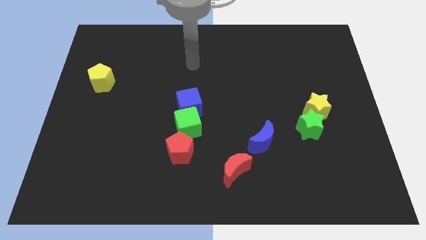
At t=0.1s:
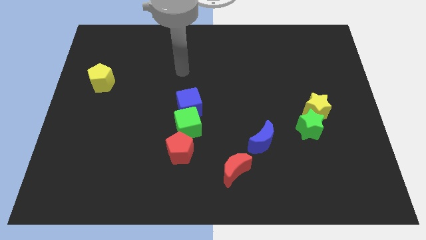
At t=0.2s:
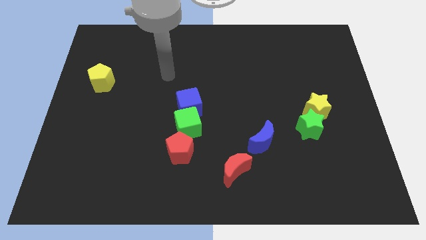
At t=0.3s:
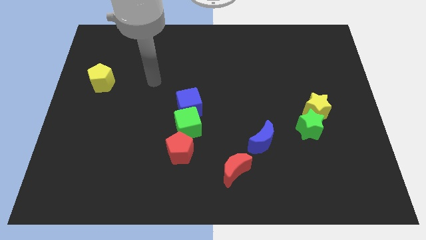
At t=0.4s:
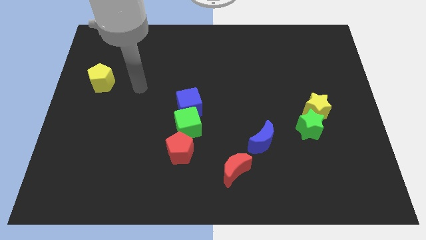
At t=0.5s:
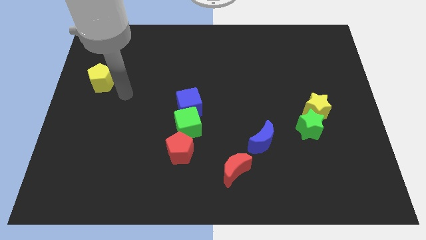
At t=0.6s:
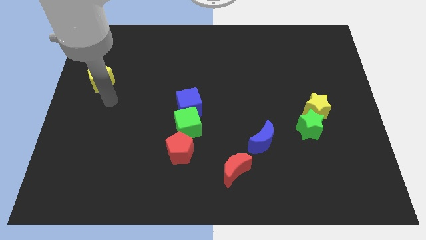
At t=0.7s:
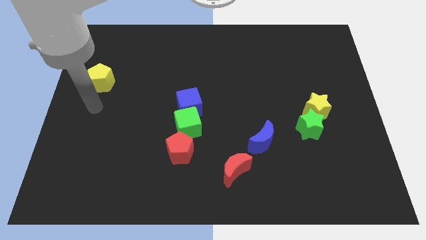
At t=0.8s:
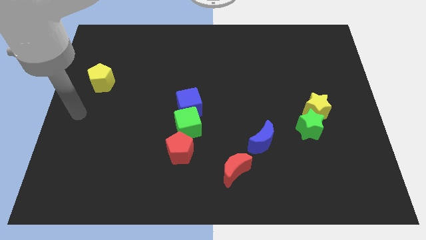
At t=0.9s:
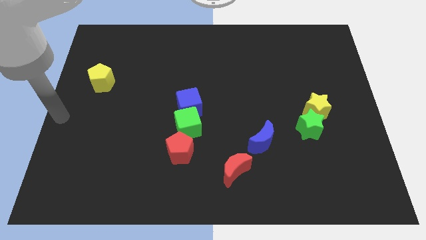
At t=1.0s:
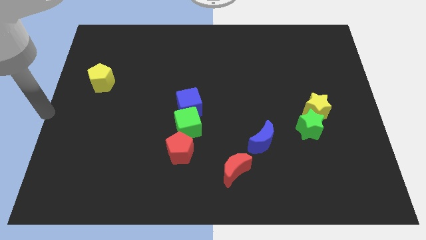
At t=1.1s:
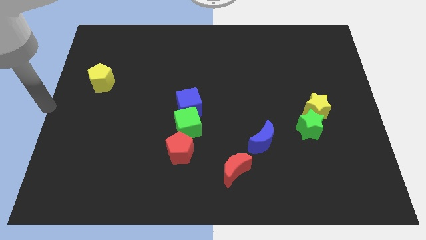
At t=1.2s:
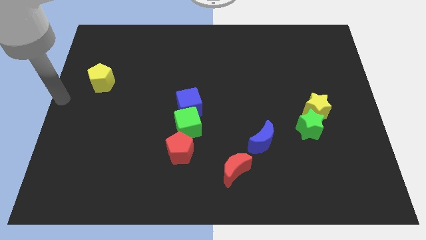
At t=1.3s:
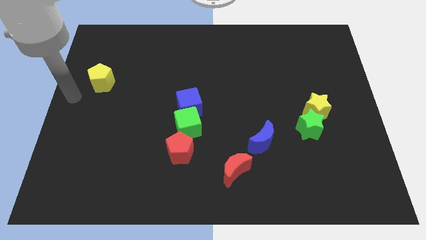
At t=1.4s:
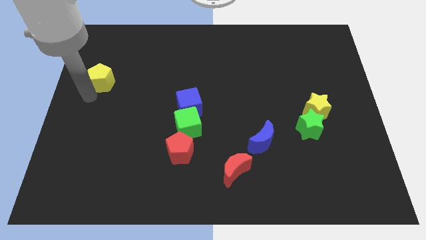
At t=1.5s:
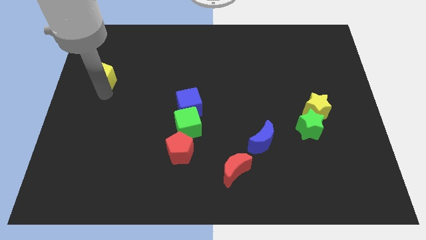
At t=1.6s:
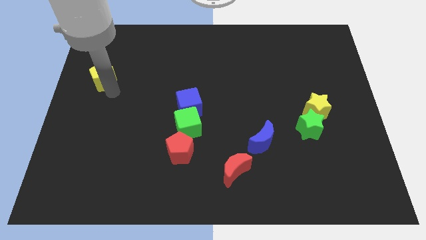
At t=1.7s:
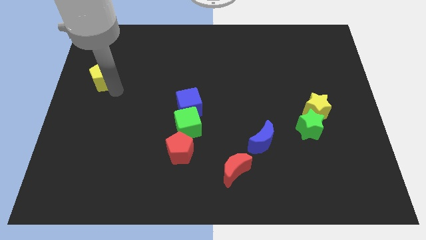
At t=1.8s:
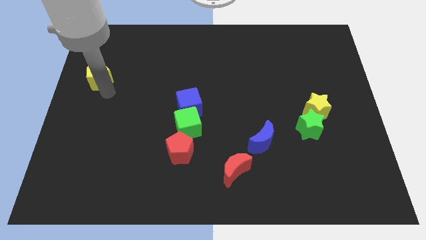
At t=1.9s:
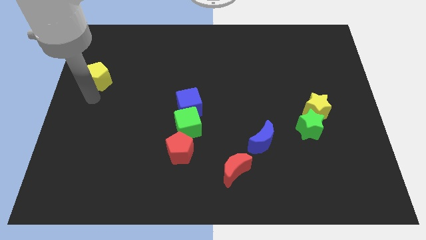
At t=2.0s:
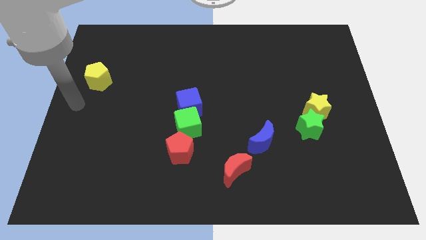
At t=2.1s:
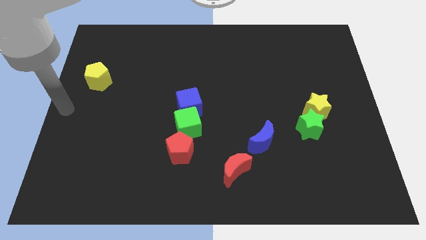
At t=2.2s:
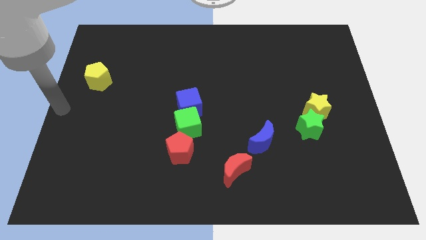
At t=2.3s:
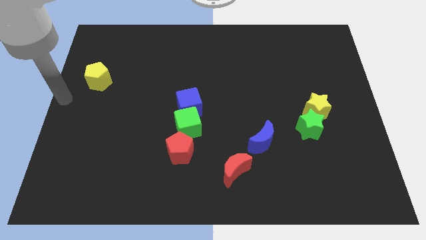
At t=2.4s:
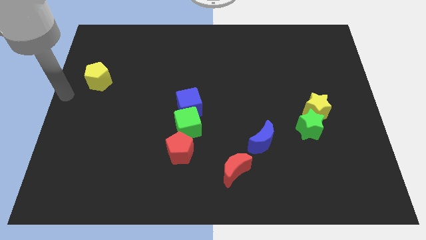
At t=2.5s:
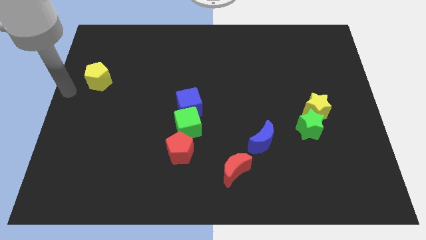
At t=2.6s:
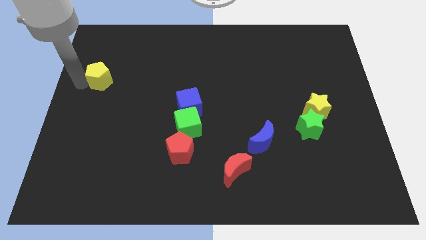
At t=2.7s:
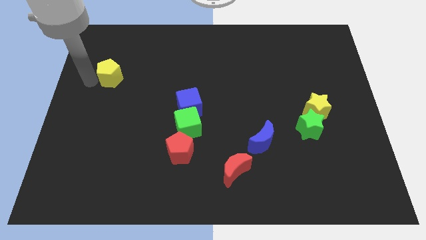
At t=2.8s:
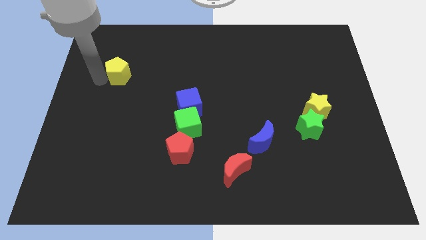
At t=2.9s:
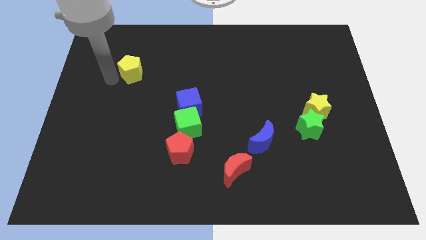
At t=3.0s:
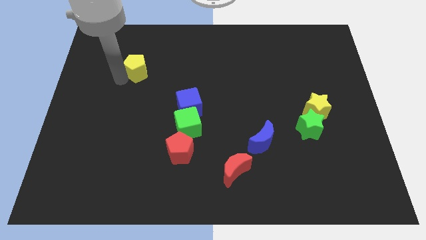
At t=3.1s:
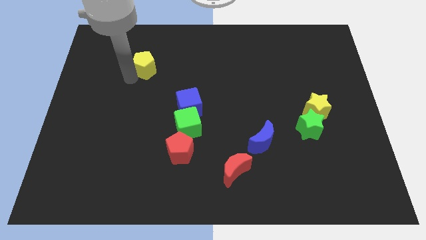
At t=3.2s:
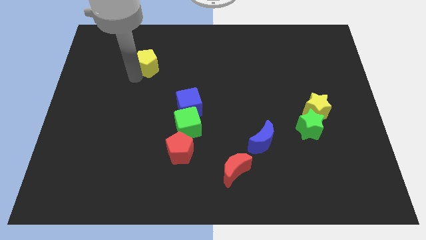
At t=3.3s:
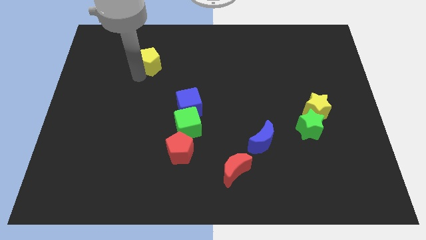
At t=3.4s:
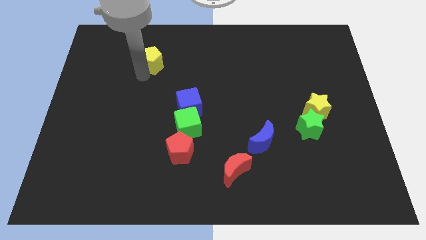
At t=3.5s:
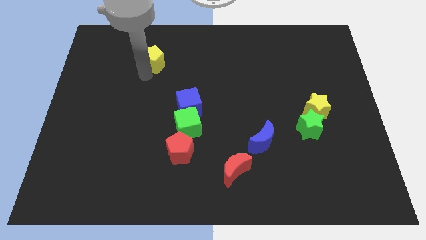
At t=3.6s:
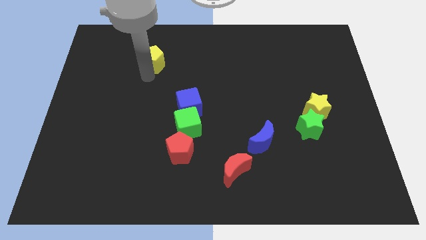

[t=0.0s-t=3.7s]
slide the yellow pentagon towards the top center

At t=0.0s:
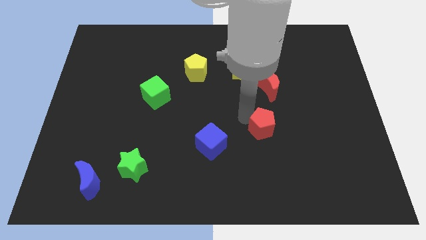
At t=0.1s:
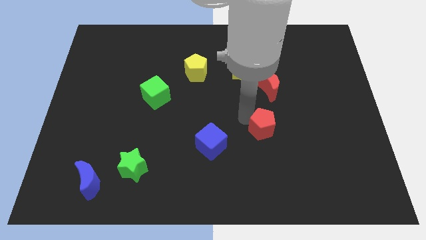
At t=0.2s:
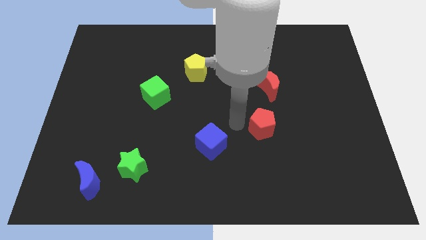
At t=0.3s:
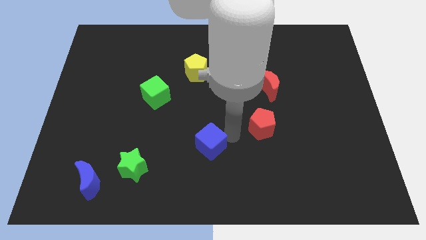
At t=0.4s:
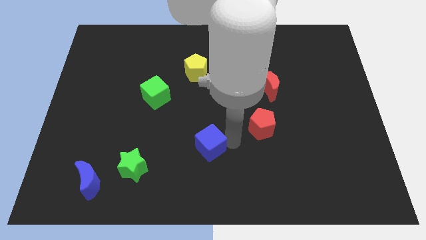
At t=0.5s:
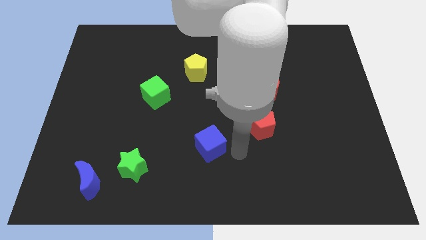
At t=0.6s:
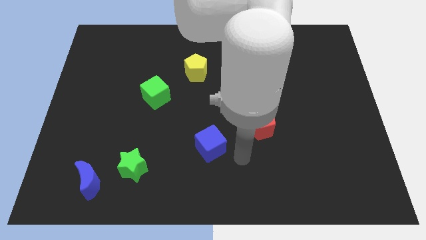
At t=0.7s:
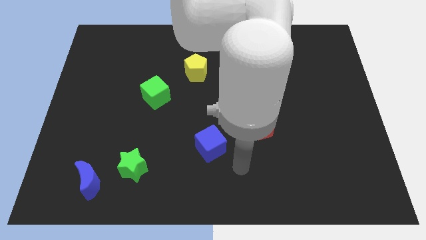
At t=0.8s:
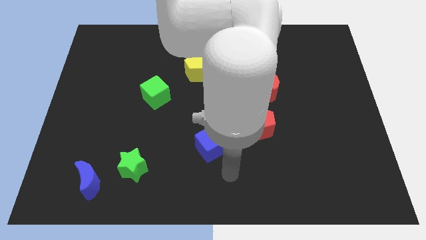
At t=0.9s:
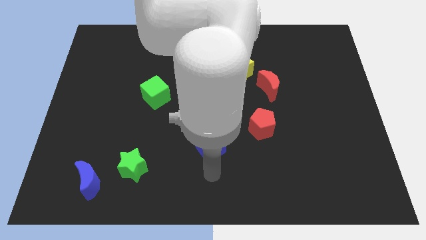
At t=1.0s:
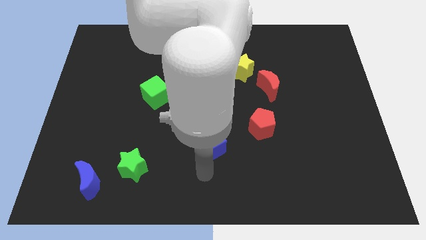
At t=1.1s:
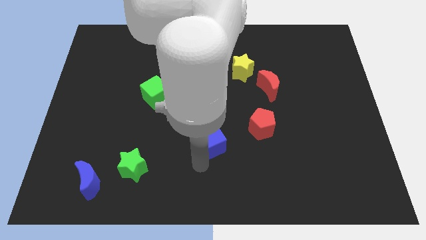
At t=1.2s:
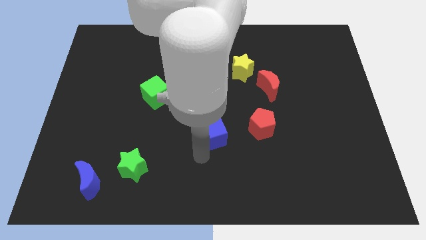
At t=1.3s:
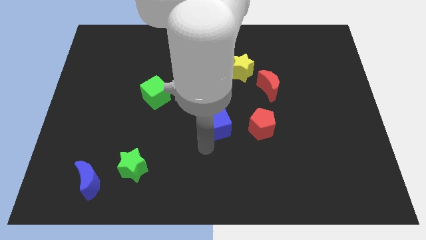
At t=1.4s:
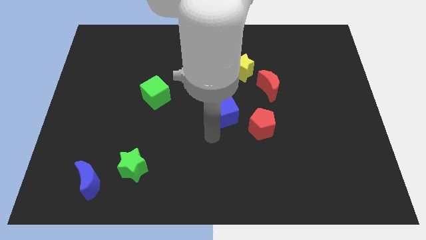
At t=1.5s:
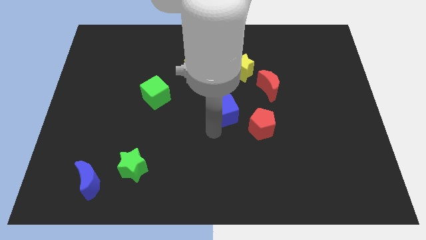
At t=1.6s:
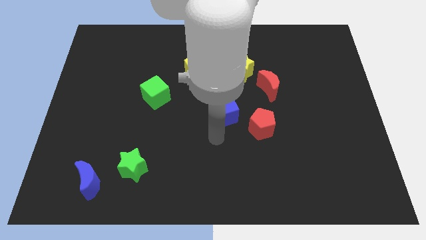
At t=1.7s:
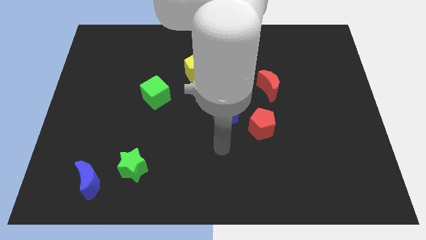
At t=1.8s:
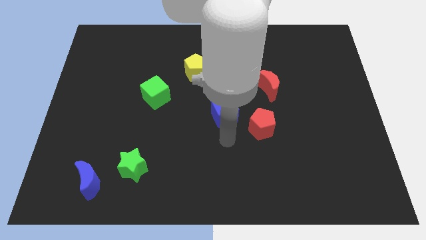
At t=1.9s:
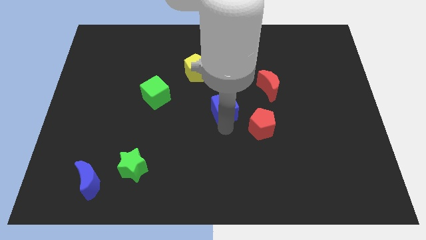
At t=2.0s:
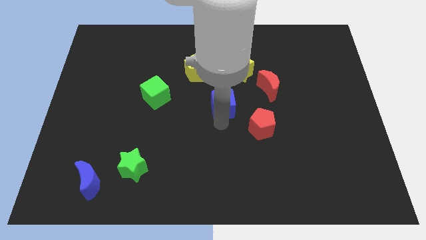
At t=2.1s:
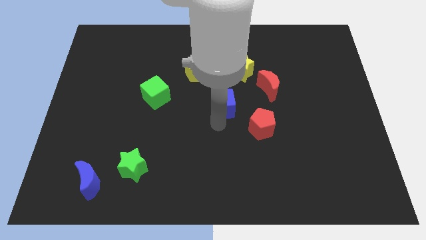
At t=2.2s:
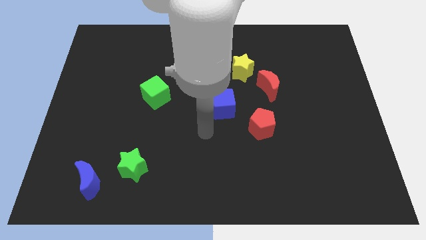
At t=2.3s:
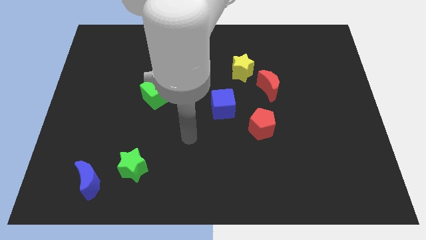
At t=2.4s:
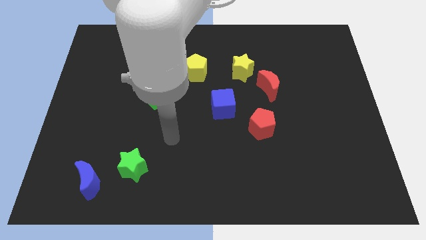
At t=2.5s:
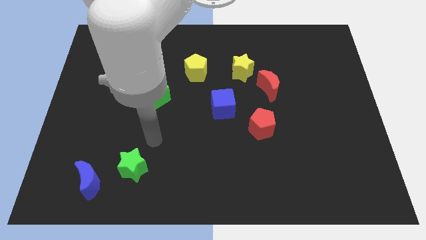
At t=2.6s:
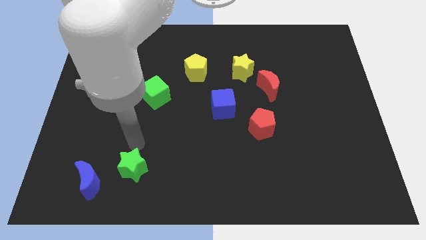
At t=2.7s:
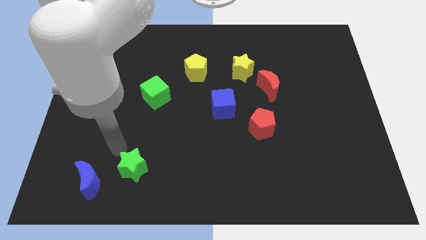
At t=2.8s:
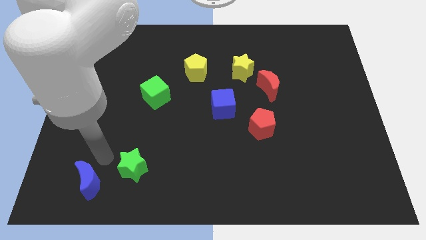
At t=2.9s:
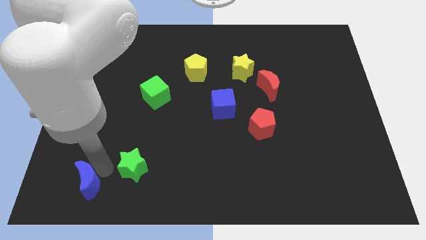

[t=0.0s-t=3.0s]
push the blue cube to the bottom left of the yellow star

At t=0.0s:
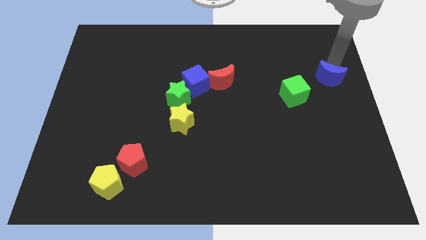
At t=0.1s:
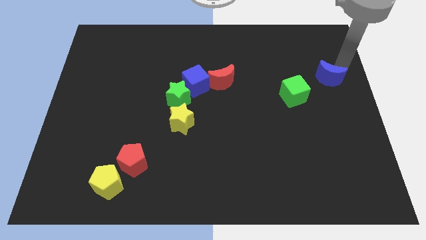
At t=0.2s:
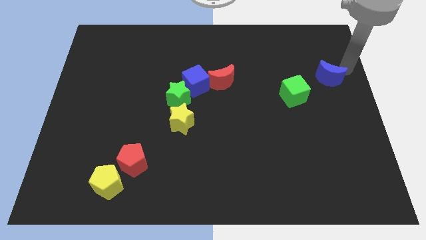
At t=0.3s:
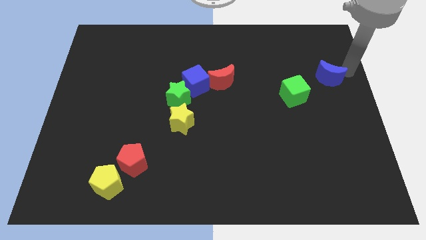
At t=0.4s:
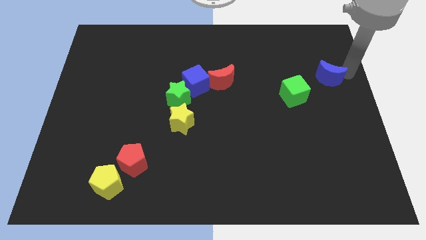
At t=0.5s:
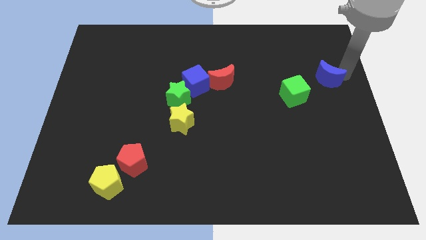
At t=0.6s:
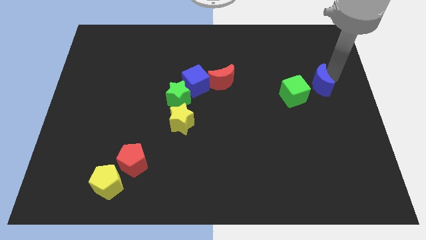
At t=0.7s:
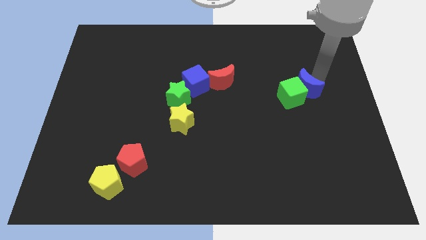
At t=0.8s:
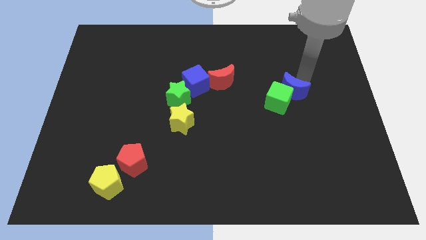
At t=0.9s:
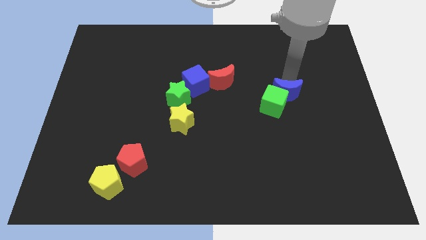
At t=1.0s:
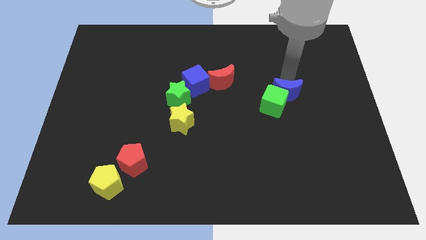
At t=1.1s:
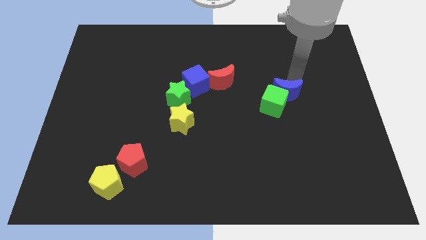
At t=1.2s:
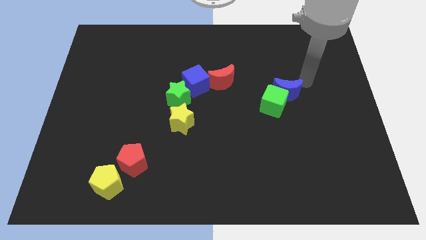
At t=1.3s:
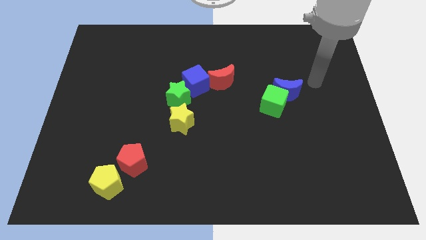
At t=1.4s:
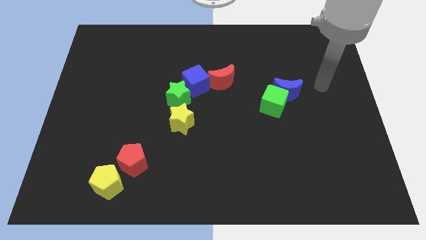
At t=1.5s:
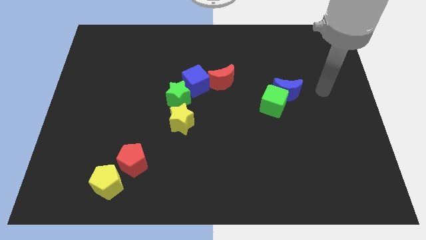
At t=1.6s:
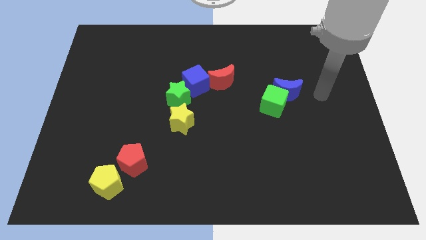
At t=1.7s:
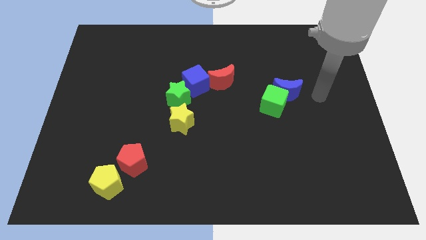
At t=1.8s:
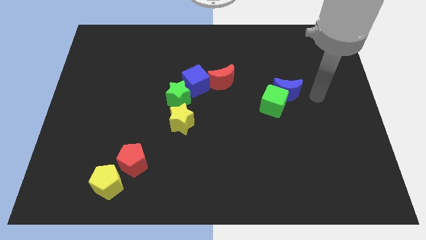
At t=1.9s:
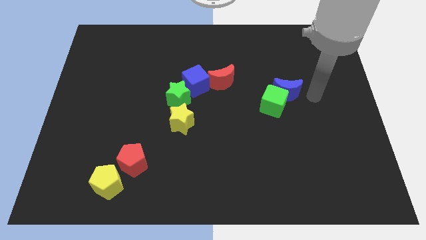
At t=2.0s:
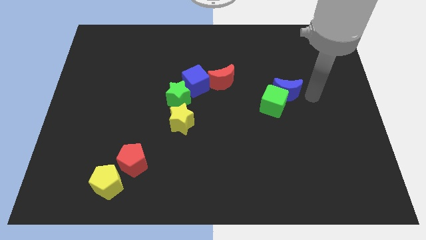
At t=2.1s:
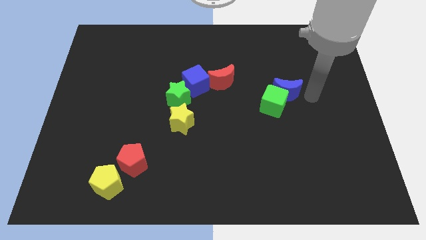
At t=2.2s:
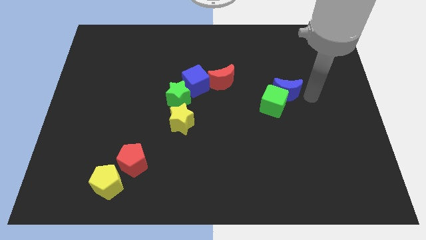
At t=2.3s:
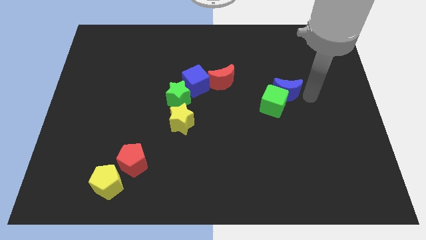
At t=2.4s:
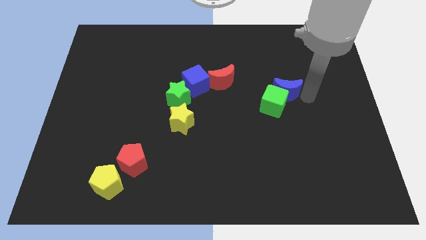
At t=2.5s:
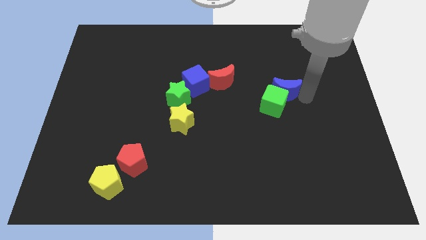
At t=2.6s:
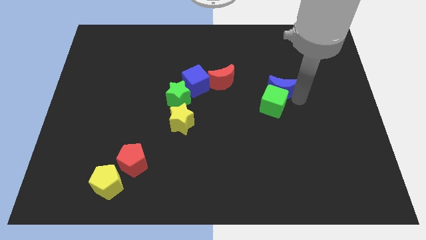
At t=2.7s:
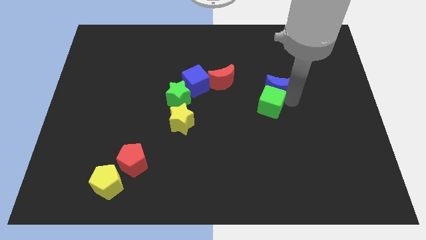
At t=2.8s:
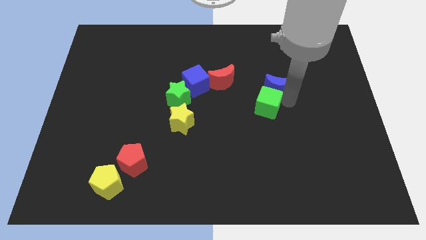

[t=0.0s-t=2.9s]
push the blue crescent into the green cube
